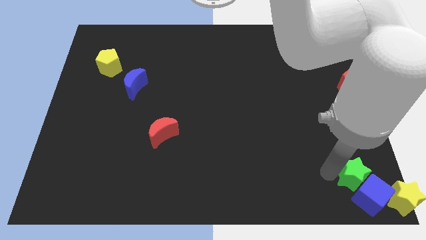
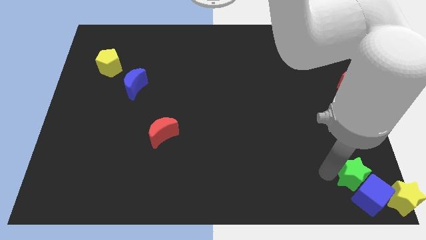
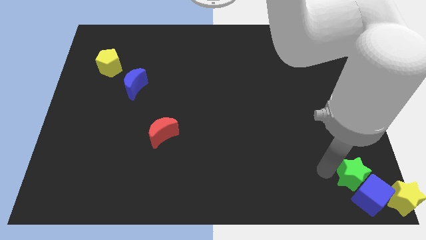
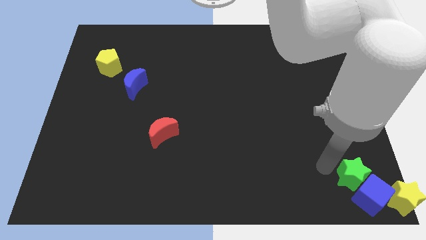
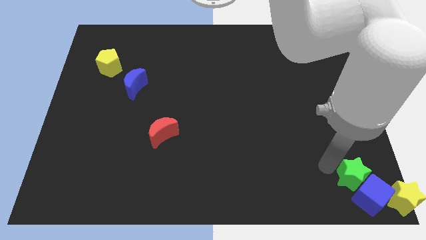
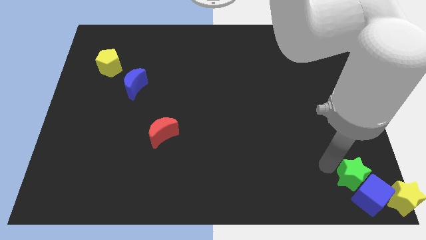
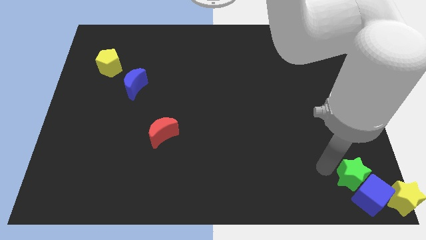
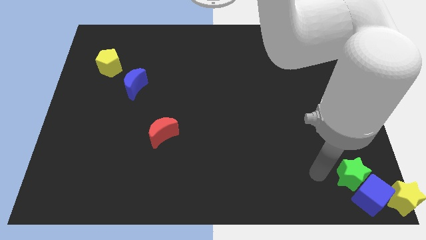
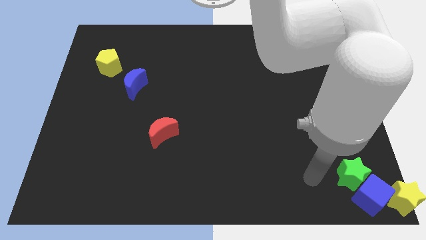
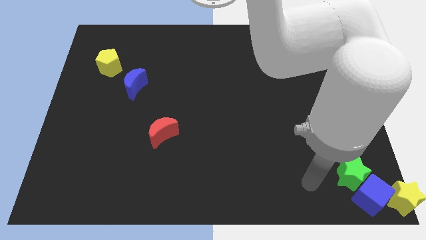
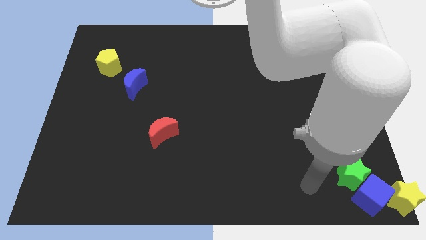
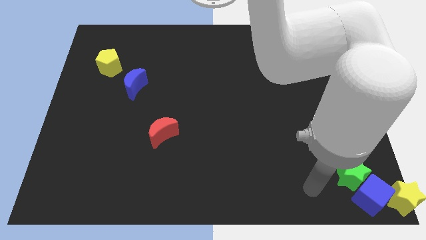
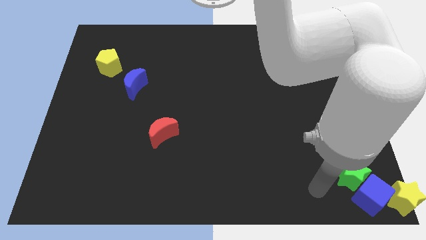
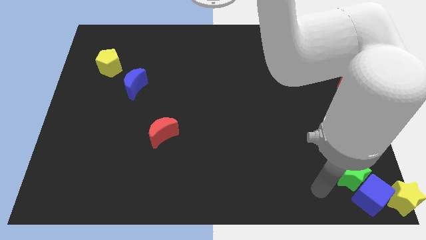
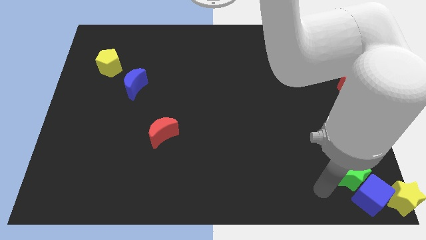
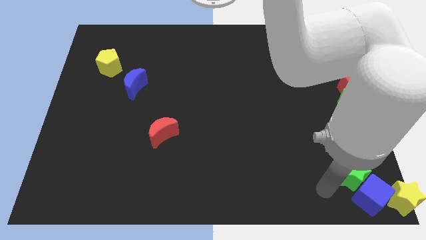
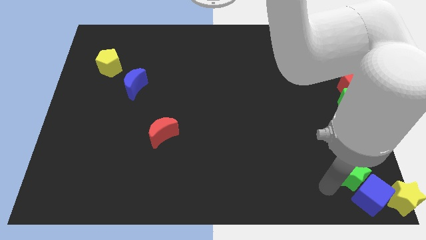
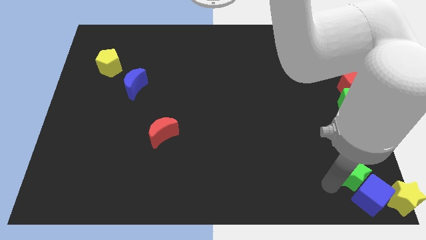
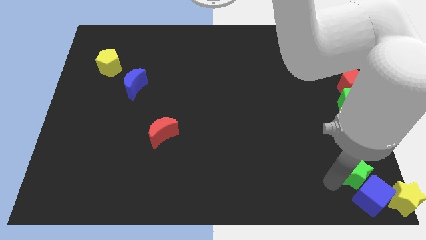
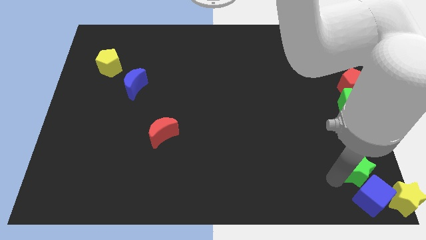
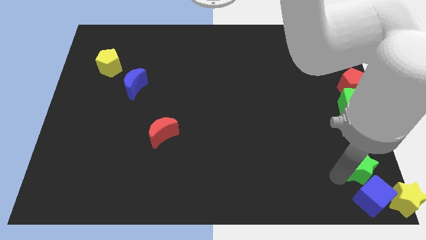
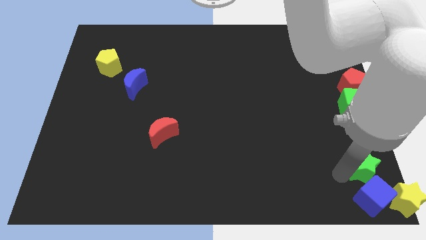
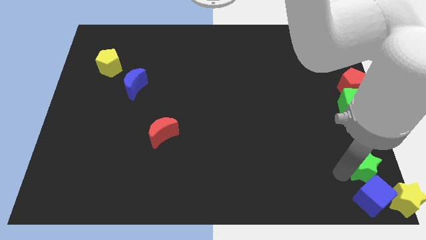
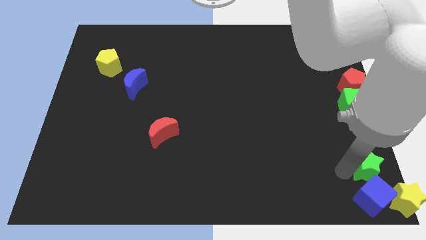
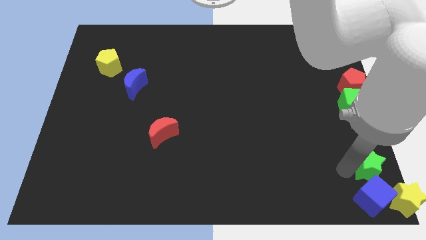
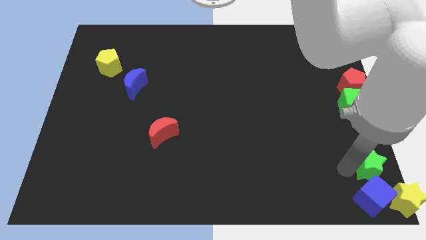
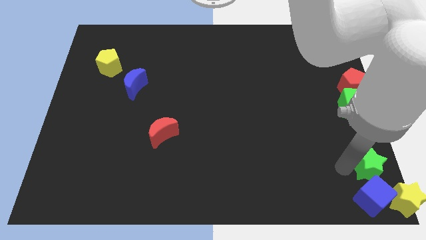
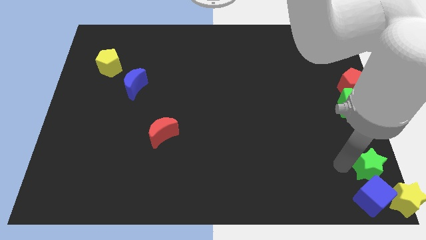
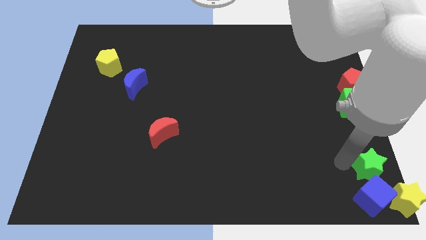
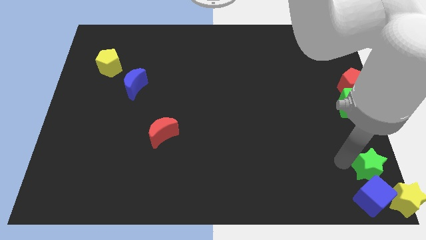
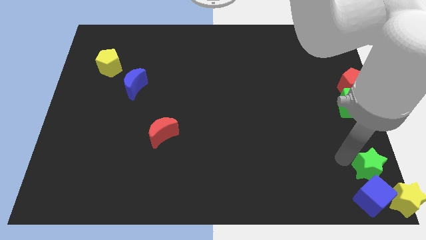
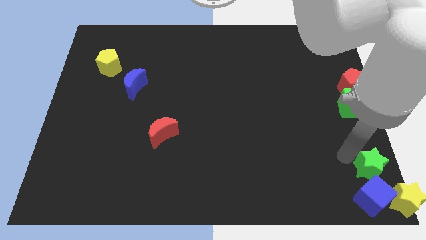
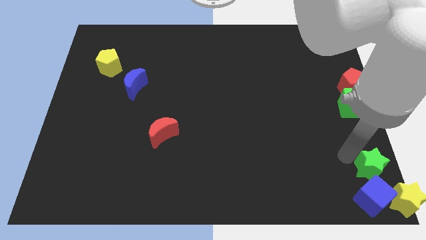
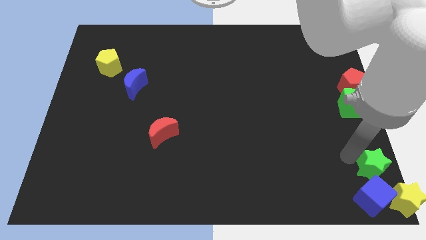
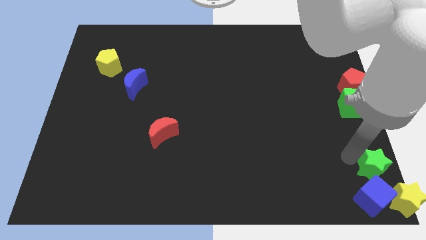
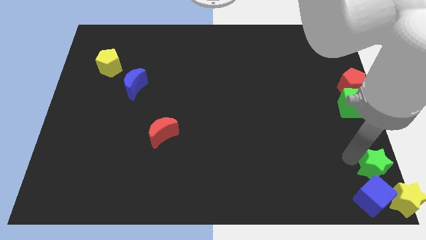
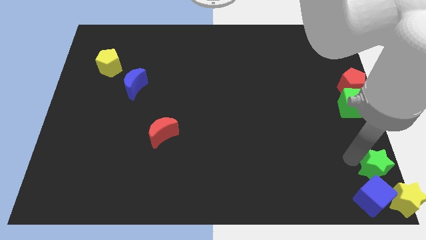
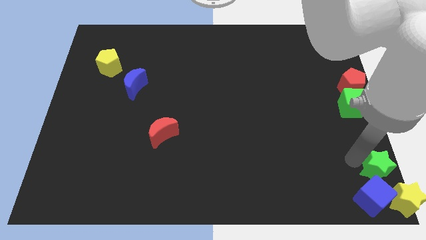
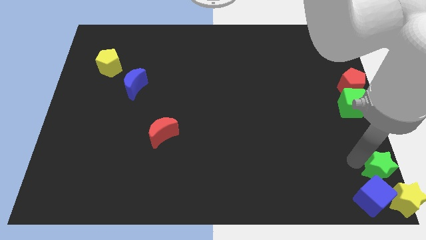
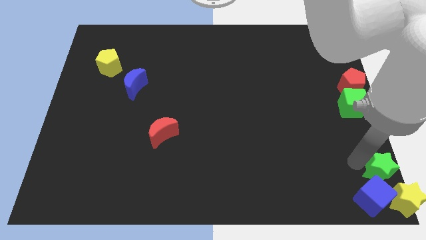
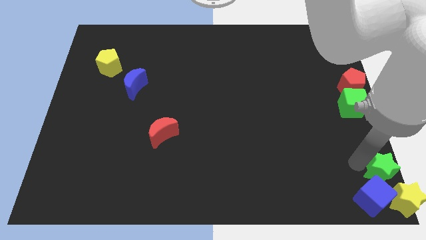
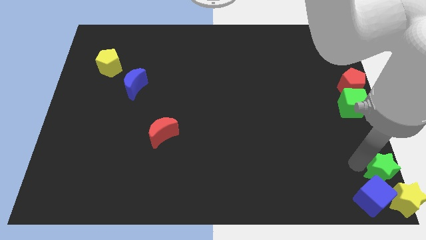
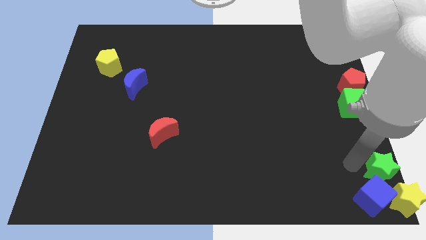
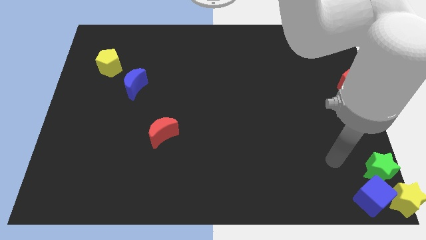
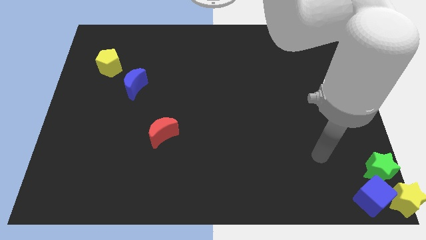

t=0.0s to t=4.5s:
place green star above yellow star

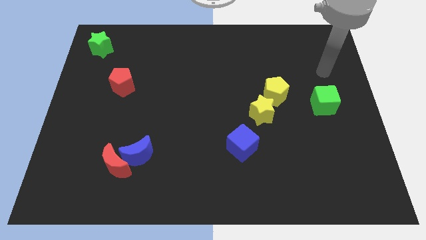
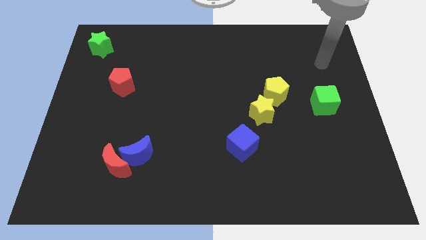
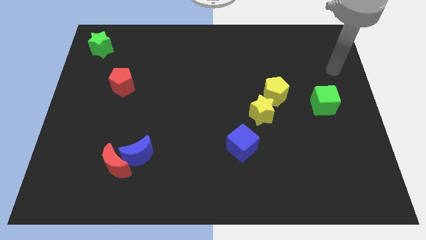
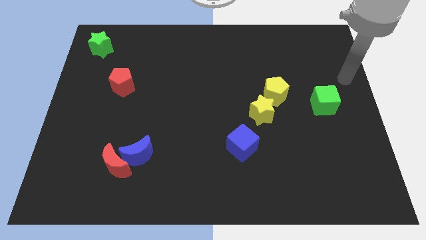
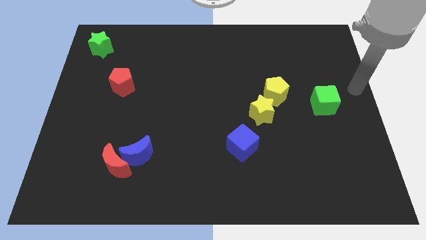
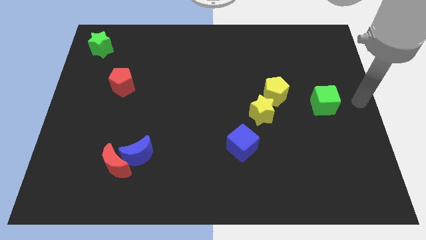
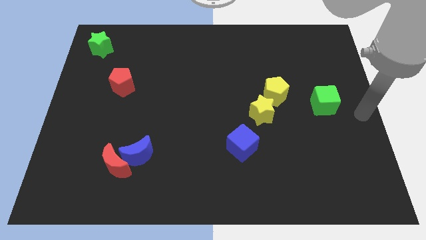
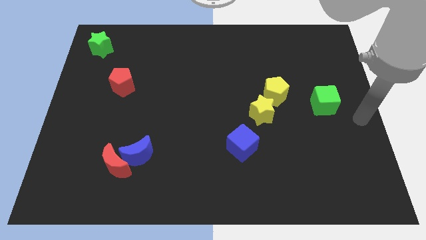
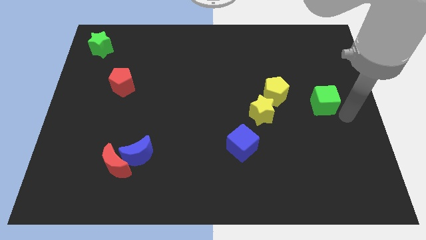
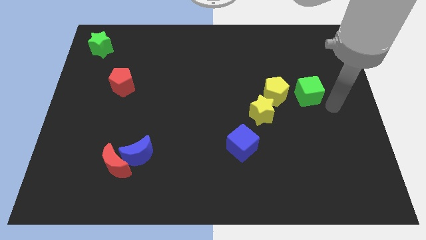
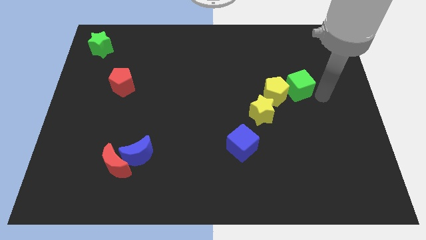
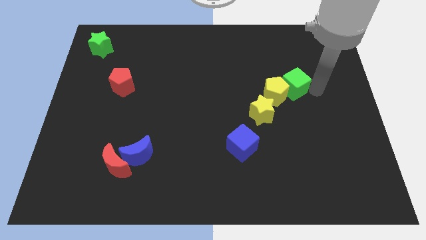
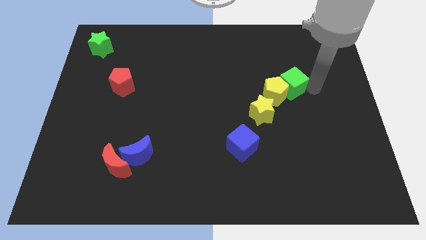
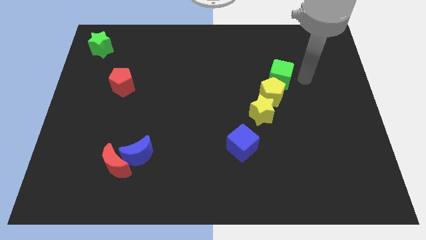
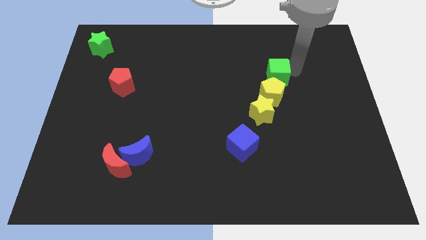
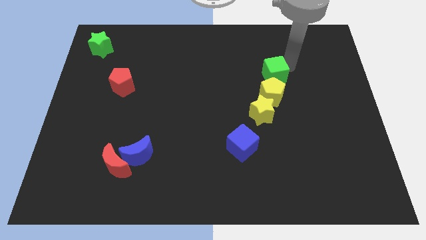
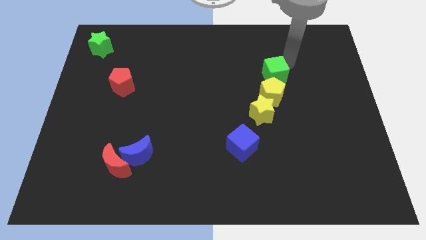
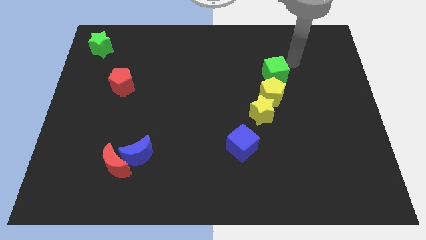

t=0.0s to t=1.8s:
place the green cube above the yellow pentagon

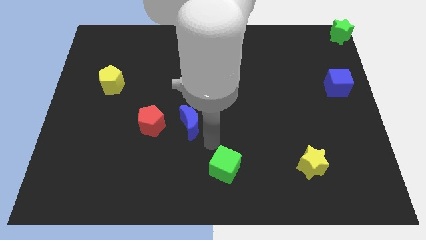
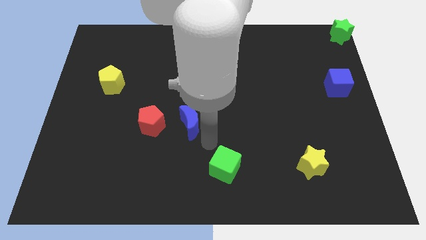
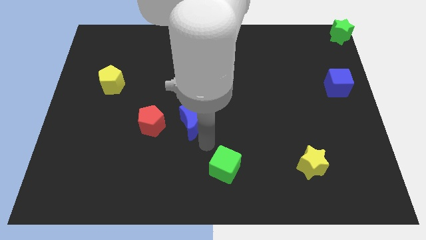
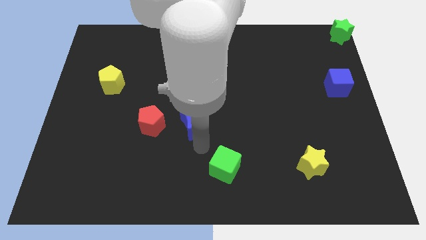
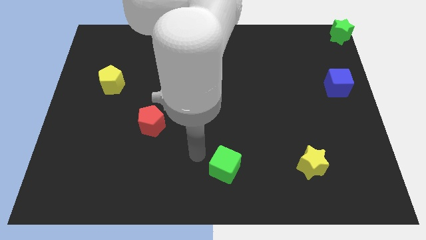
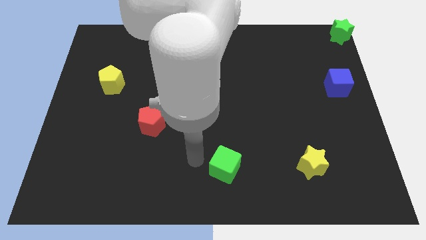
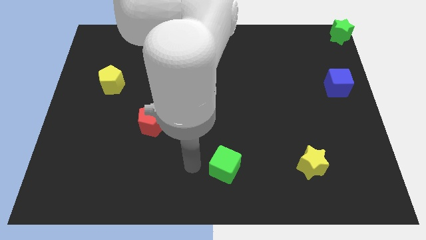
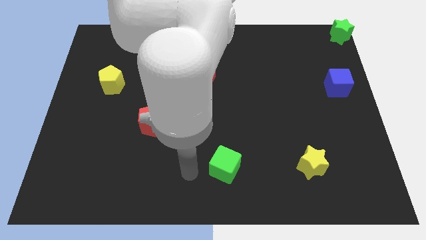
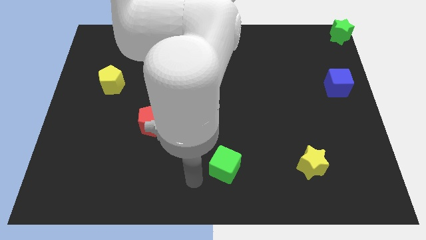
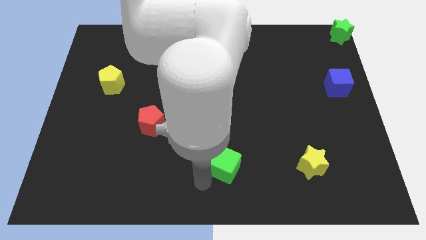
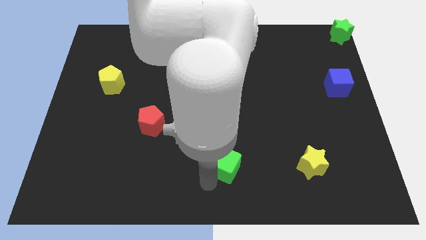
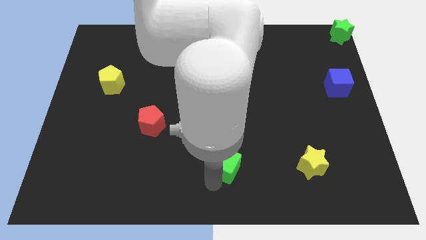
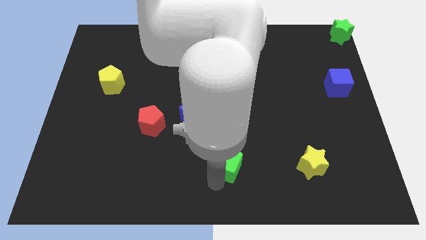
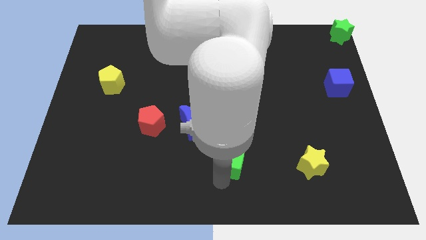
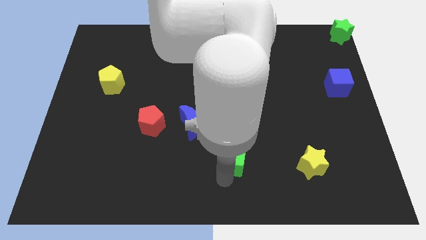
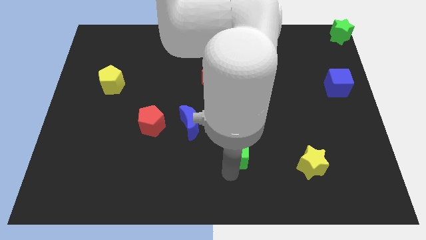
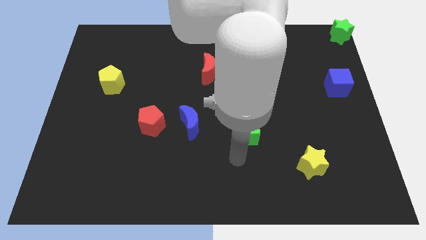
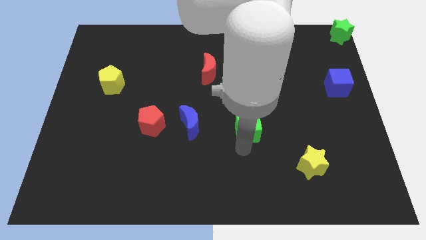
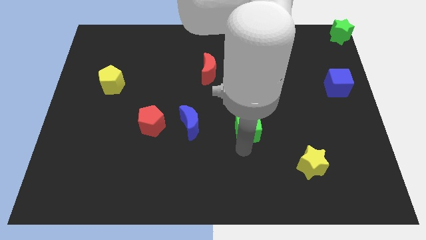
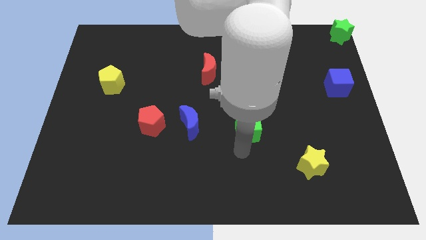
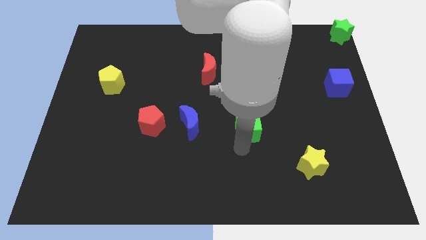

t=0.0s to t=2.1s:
place the green cube to the right of the blue crescent

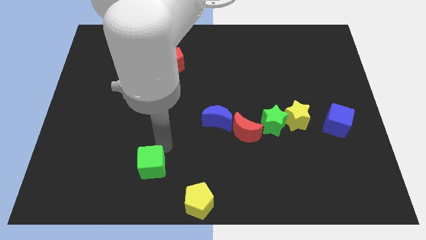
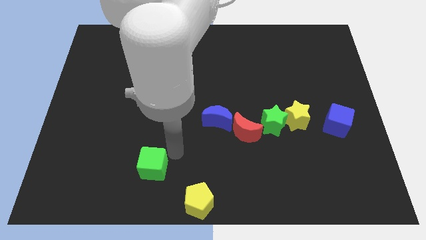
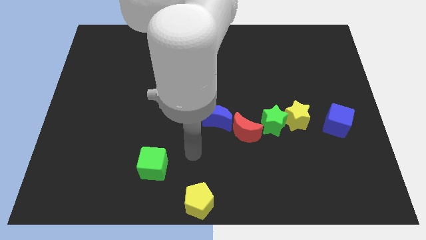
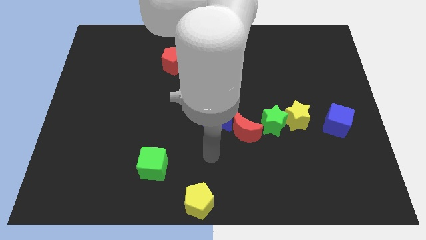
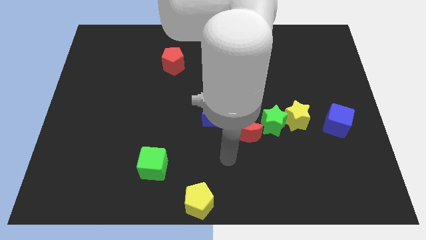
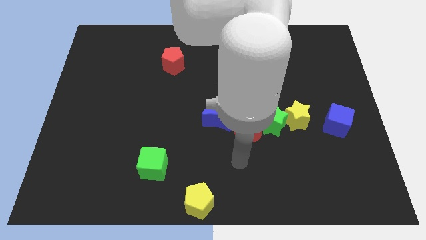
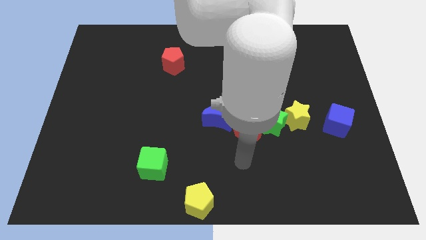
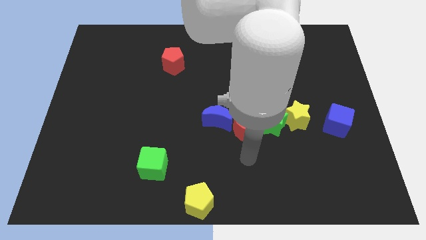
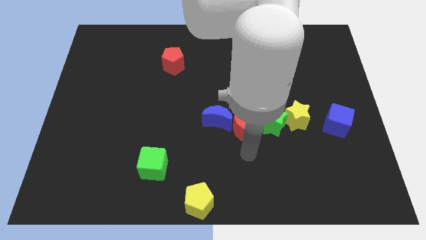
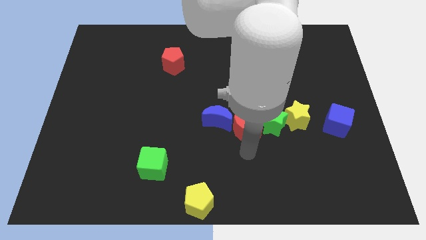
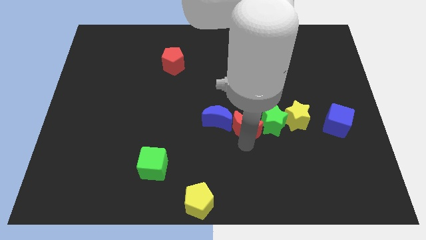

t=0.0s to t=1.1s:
touch at the bottom side of the red crescent
